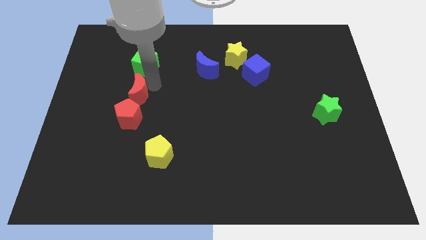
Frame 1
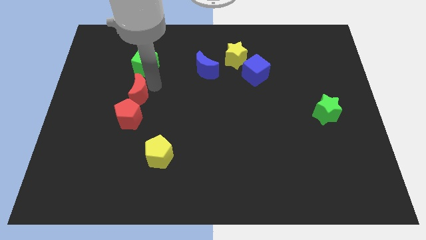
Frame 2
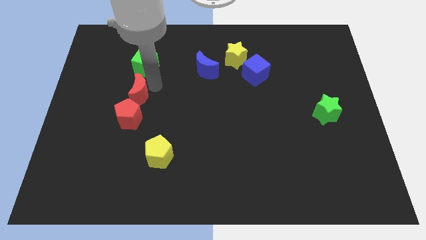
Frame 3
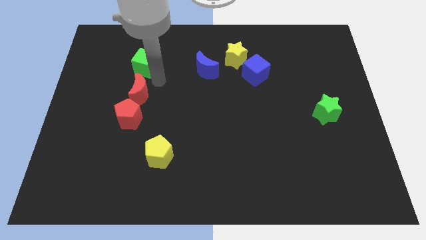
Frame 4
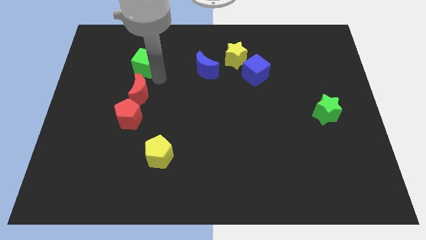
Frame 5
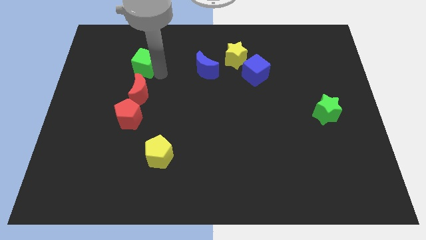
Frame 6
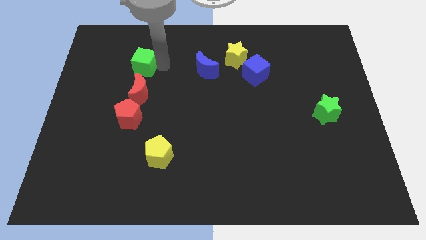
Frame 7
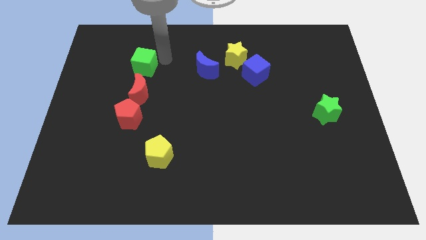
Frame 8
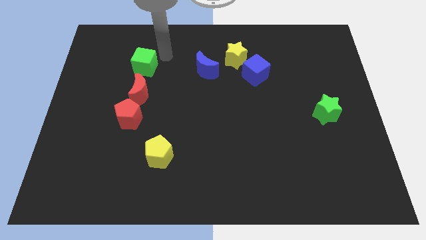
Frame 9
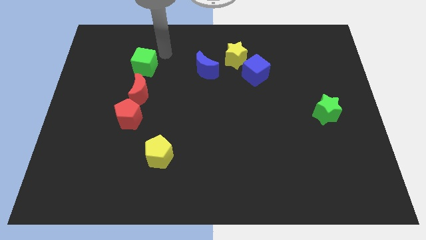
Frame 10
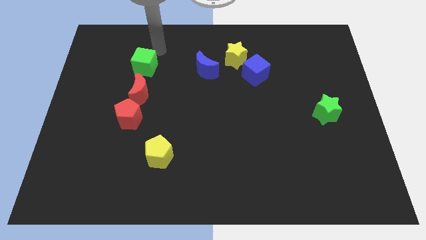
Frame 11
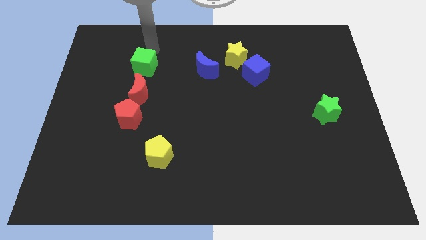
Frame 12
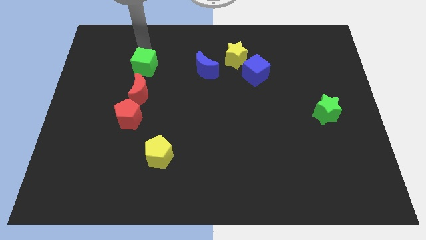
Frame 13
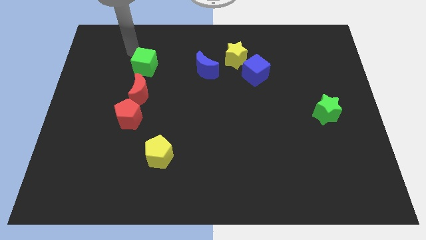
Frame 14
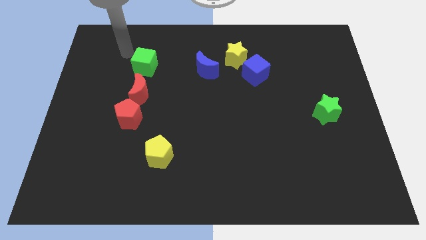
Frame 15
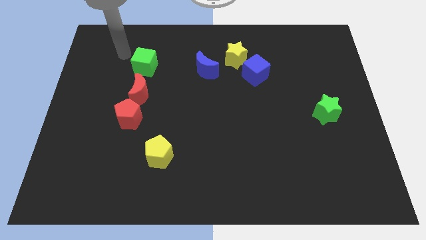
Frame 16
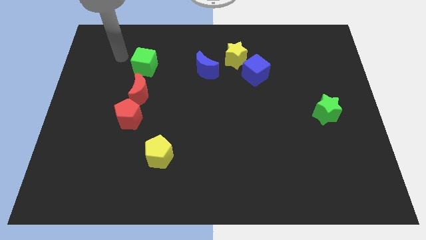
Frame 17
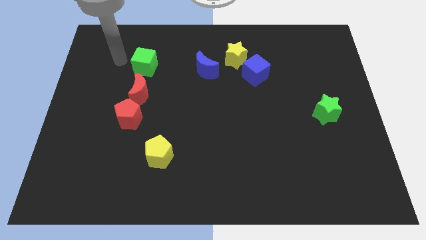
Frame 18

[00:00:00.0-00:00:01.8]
move arm left beside the green cube

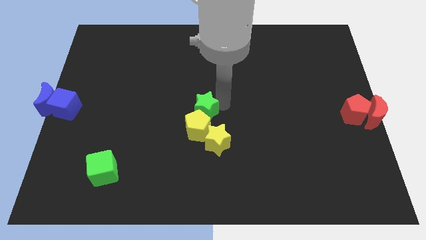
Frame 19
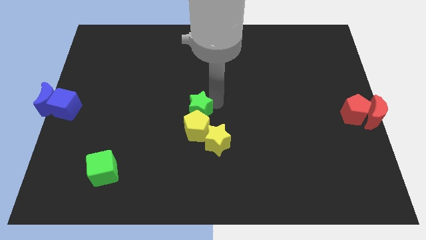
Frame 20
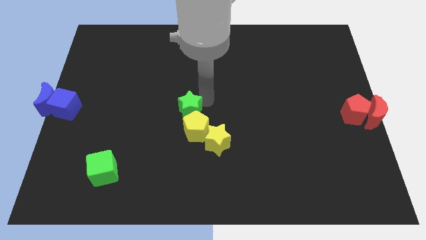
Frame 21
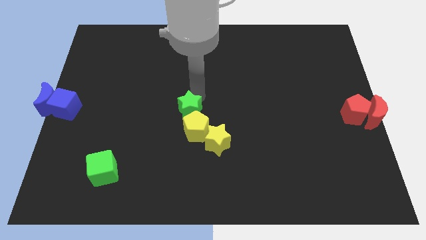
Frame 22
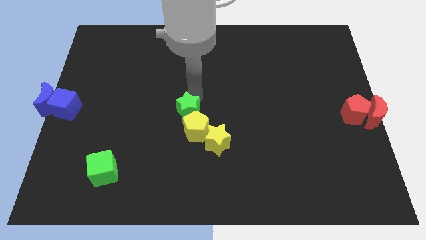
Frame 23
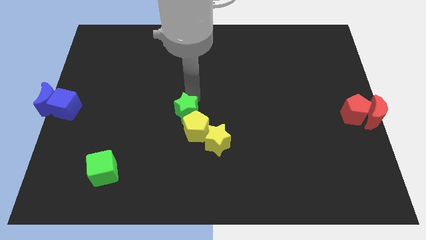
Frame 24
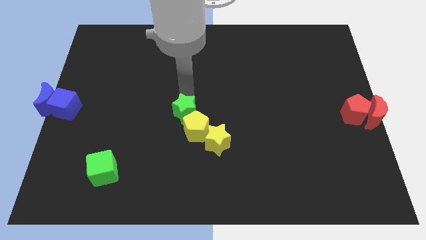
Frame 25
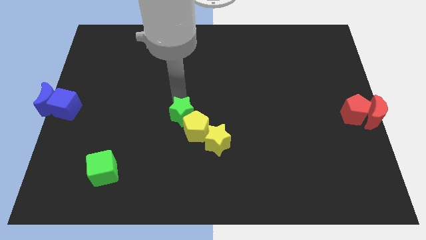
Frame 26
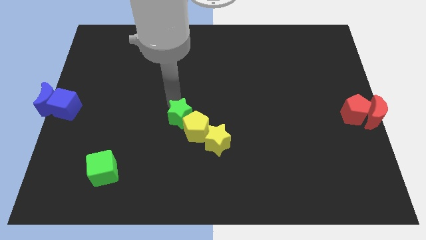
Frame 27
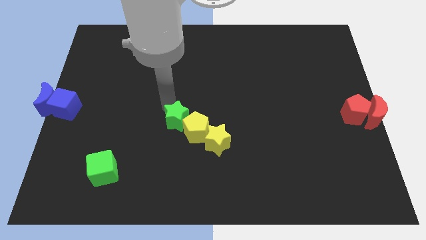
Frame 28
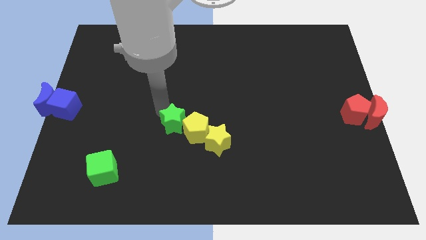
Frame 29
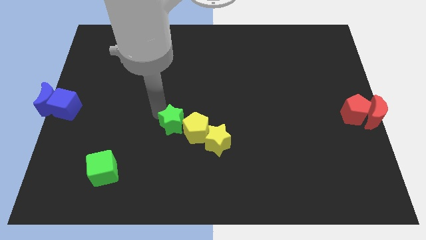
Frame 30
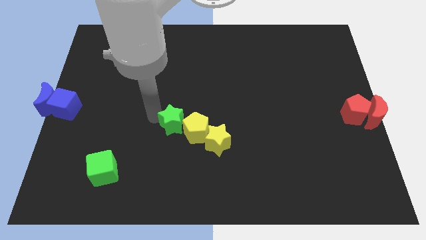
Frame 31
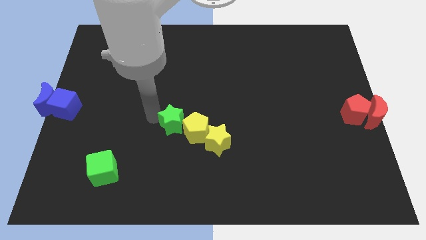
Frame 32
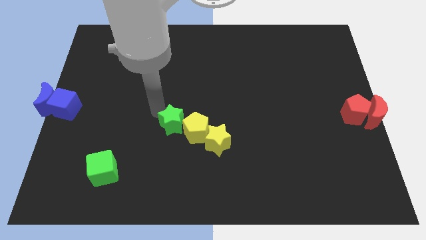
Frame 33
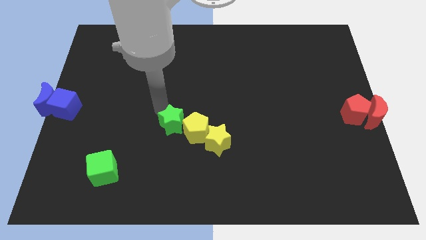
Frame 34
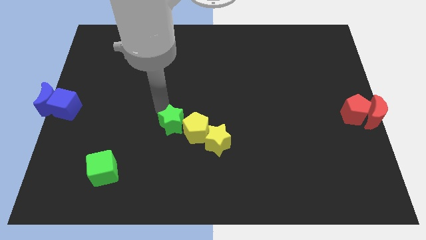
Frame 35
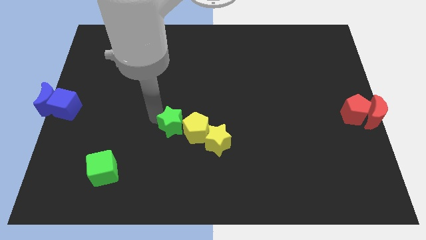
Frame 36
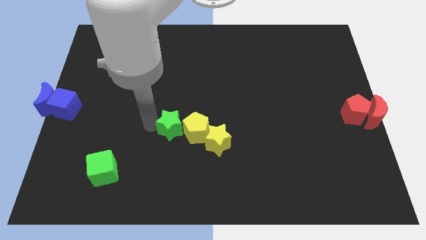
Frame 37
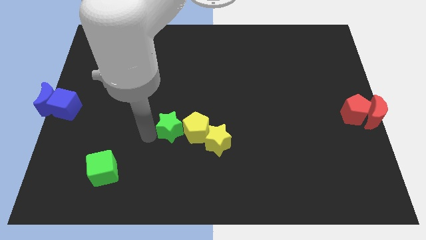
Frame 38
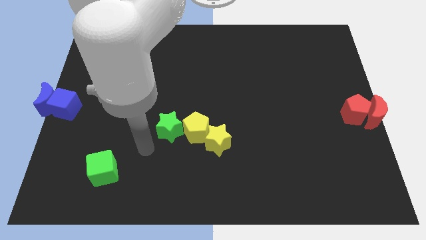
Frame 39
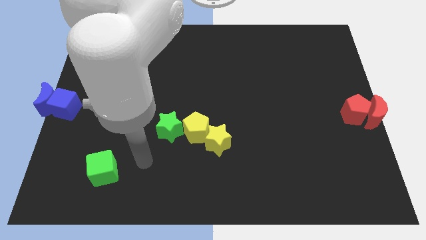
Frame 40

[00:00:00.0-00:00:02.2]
move the green star to the left of the yellow pentagon

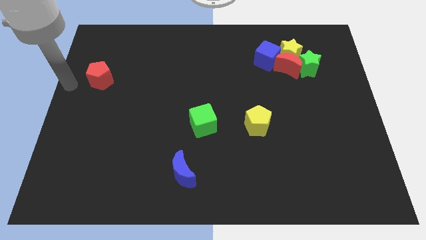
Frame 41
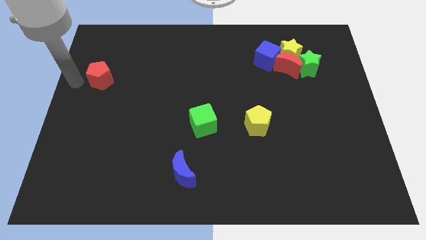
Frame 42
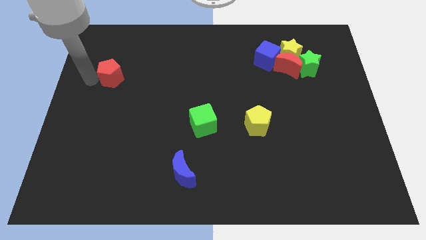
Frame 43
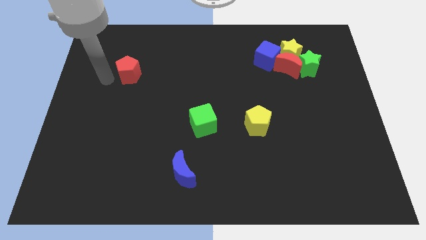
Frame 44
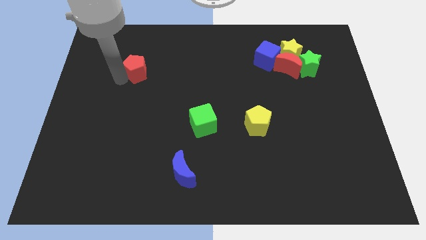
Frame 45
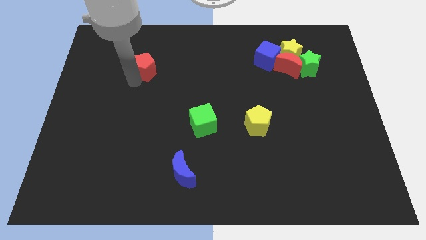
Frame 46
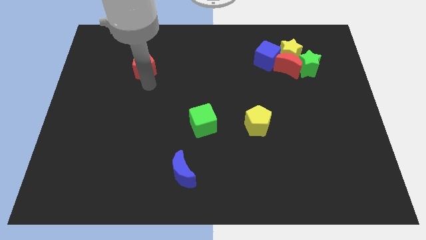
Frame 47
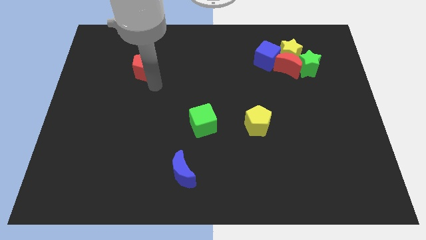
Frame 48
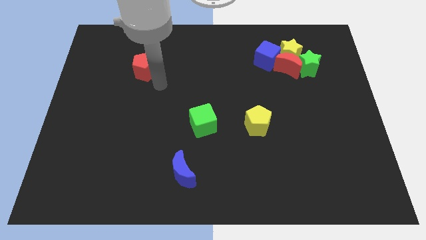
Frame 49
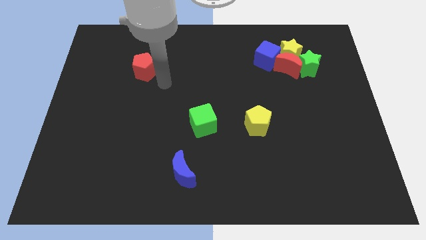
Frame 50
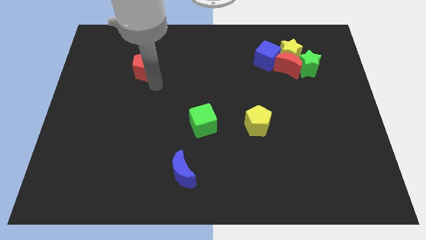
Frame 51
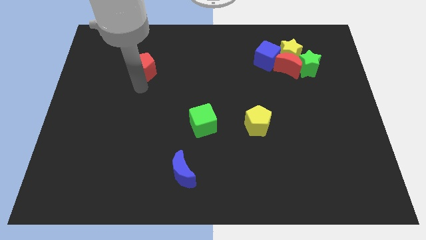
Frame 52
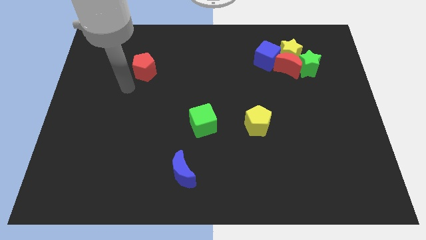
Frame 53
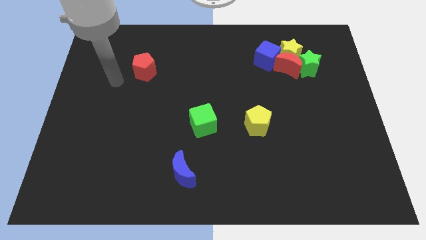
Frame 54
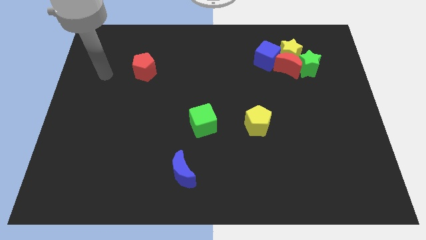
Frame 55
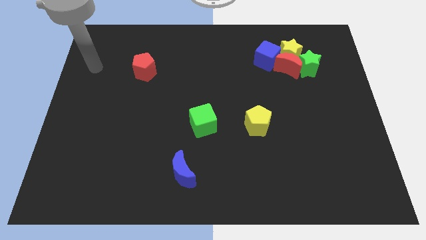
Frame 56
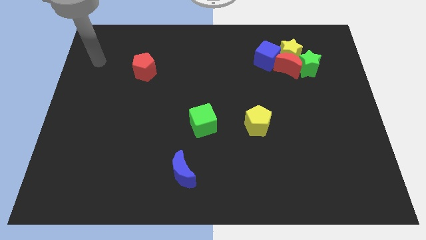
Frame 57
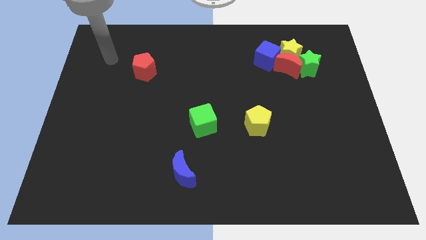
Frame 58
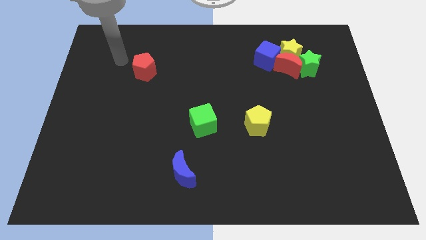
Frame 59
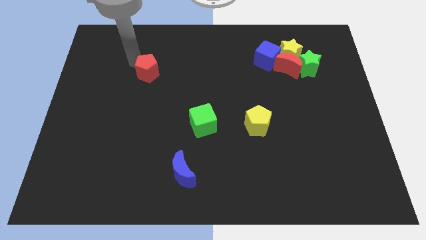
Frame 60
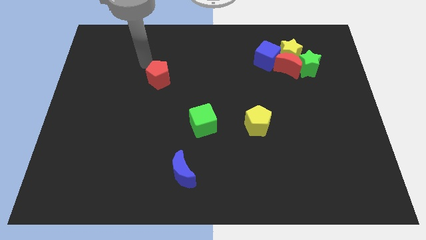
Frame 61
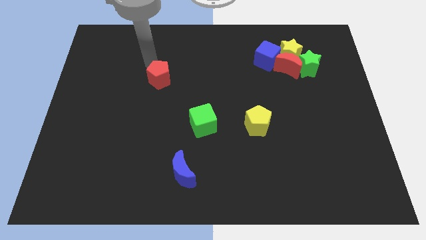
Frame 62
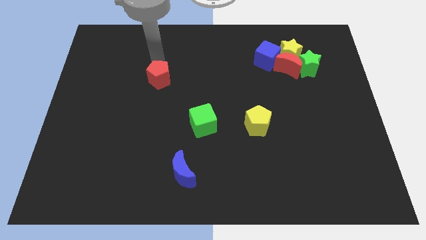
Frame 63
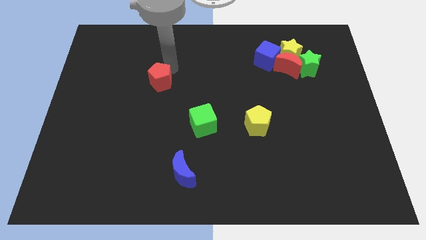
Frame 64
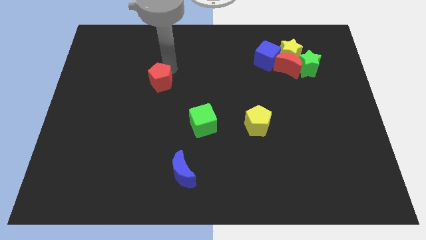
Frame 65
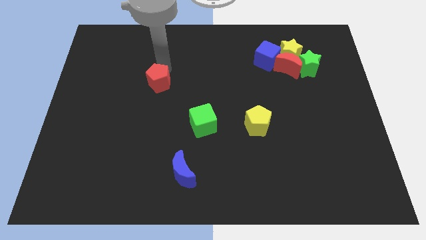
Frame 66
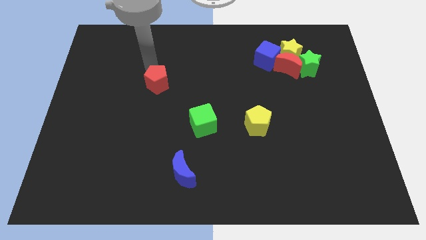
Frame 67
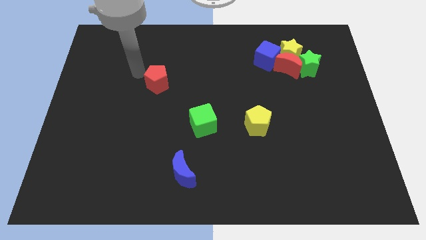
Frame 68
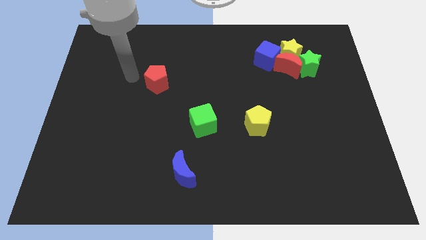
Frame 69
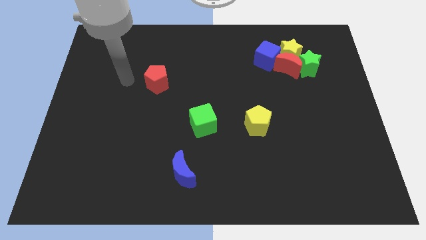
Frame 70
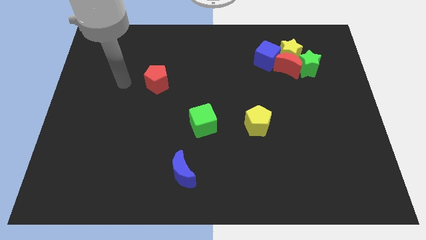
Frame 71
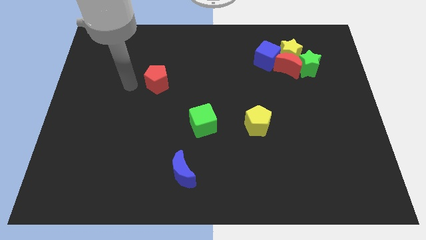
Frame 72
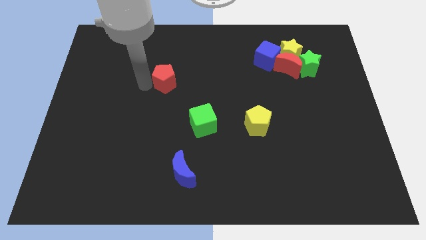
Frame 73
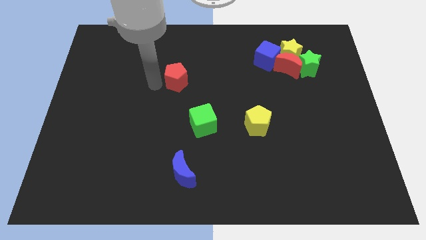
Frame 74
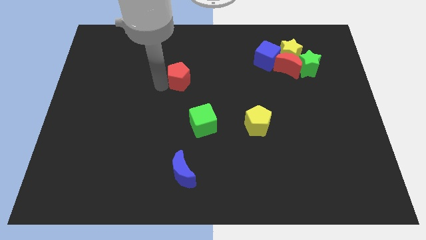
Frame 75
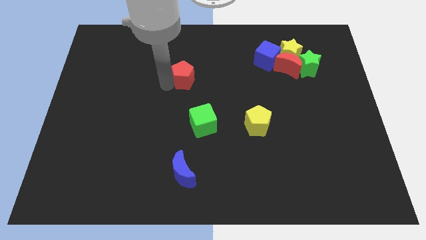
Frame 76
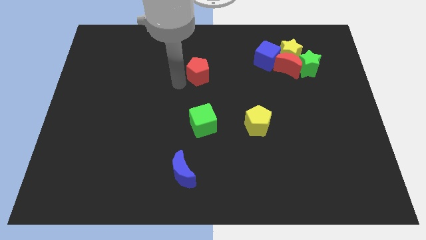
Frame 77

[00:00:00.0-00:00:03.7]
place the red pentagon at the top of the green cube

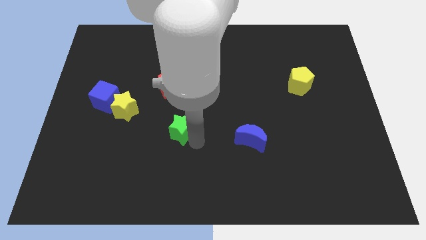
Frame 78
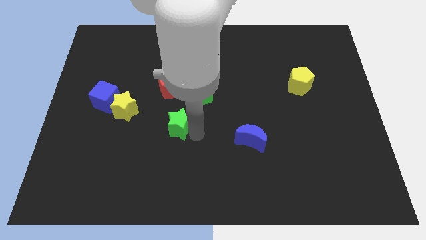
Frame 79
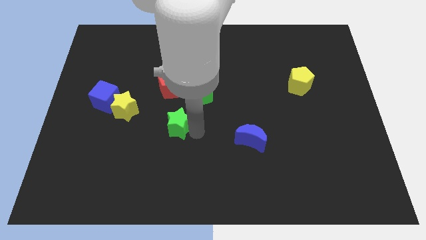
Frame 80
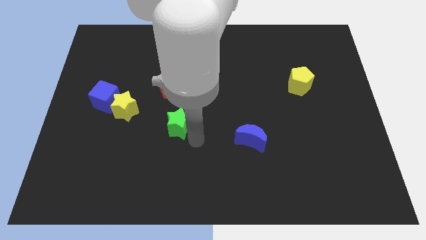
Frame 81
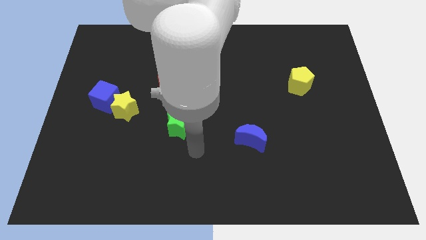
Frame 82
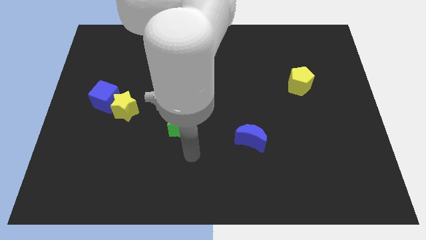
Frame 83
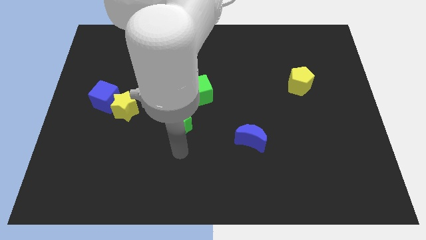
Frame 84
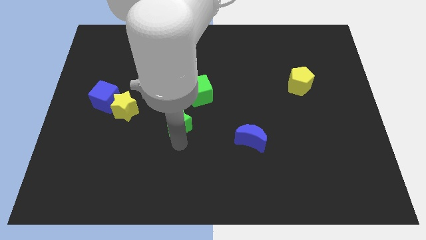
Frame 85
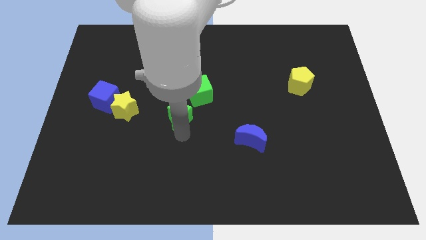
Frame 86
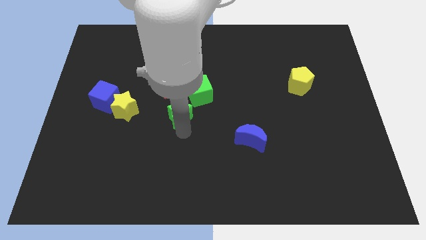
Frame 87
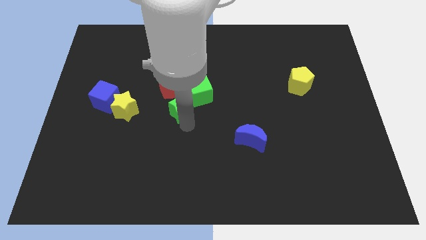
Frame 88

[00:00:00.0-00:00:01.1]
push the green star towards the red pentagon and green cube

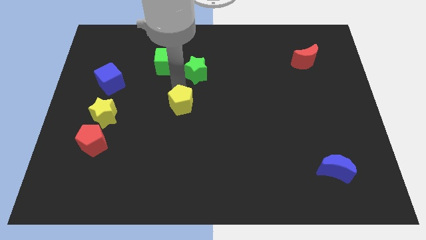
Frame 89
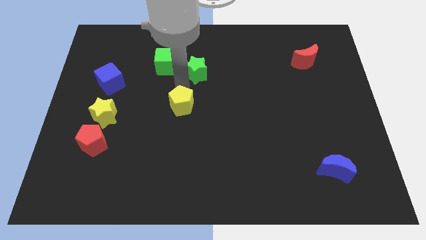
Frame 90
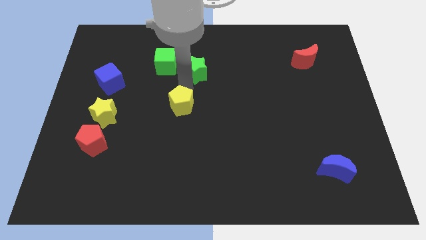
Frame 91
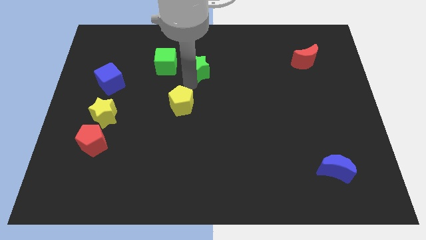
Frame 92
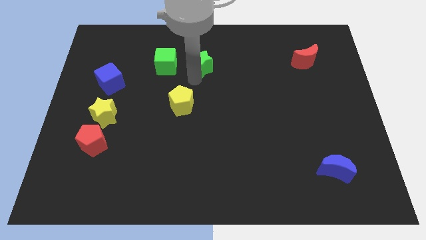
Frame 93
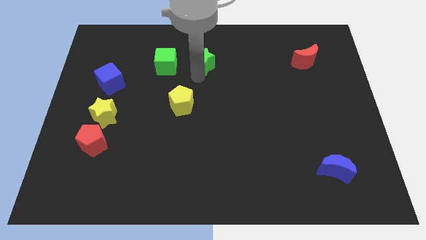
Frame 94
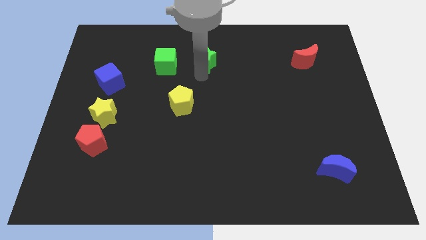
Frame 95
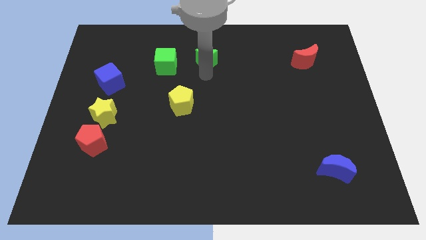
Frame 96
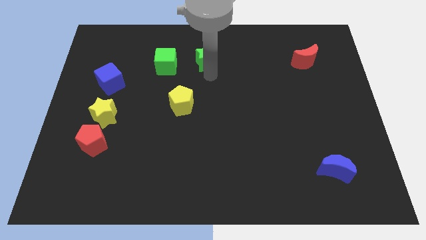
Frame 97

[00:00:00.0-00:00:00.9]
slightly push the green star to the top
